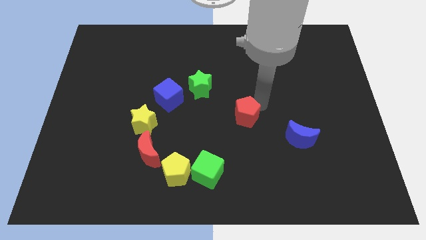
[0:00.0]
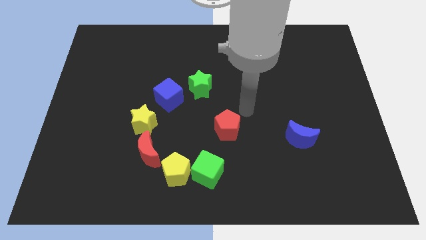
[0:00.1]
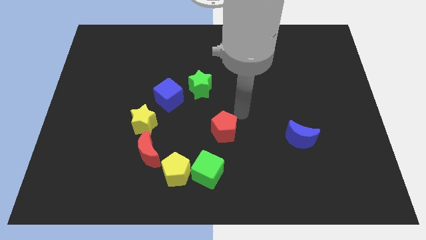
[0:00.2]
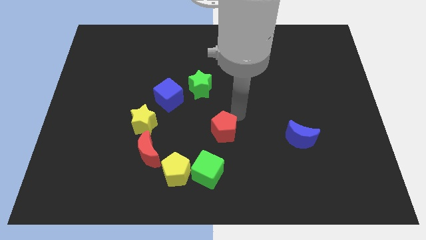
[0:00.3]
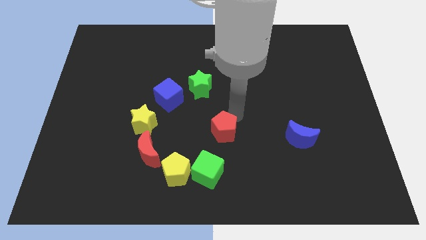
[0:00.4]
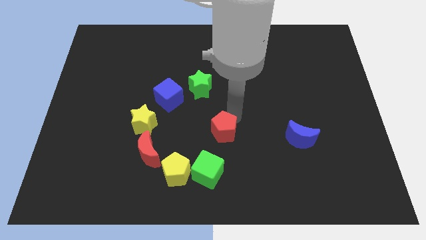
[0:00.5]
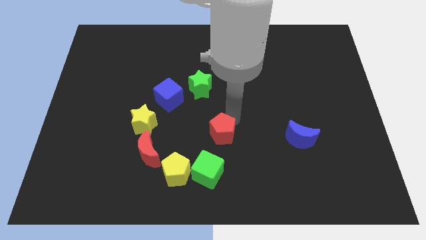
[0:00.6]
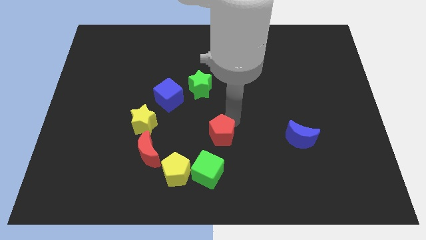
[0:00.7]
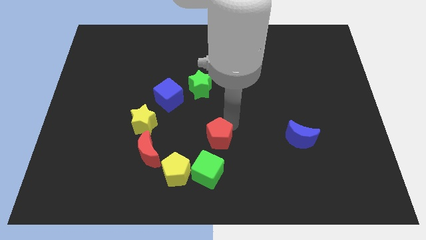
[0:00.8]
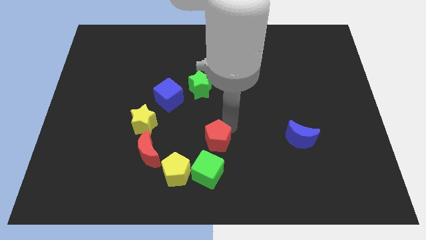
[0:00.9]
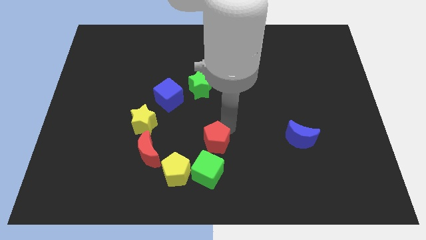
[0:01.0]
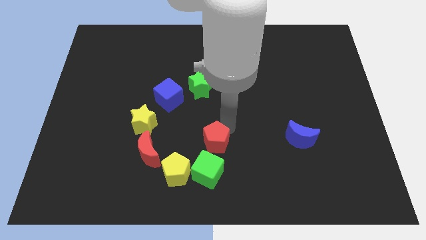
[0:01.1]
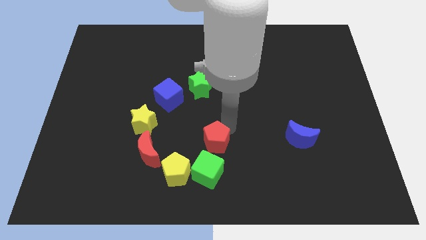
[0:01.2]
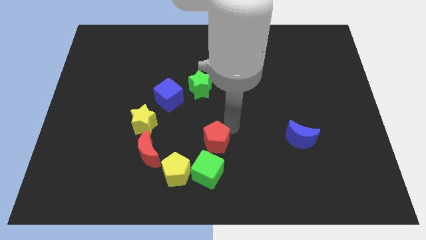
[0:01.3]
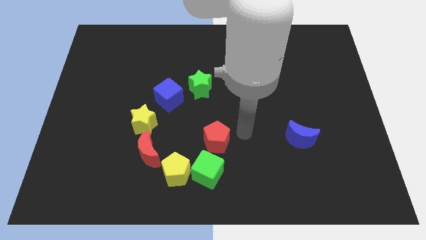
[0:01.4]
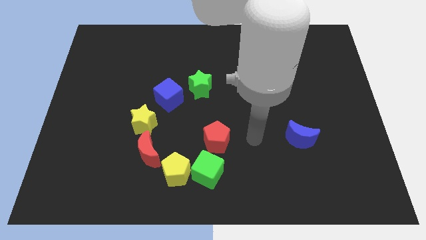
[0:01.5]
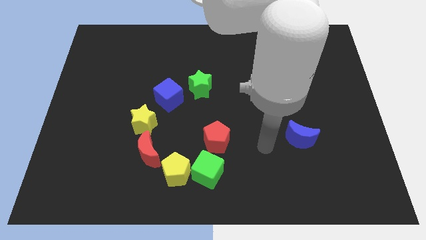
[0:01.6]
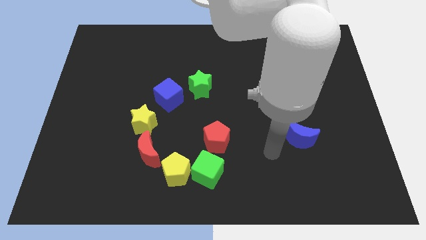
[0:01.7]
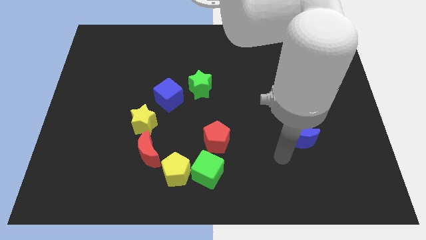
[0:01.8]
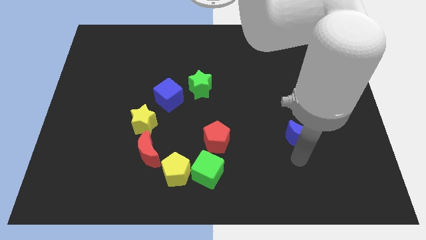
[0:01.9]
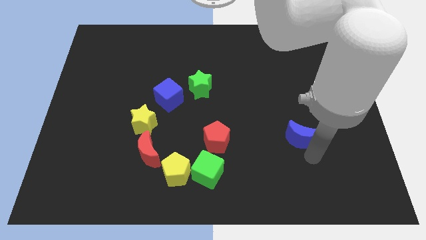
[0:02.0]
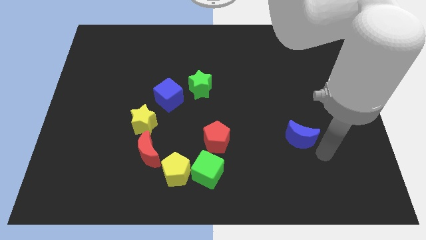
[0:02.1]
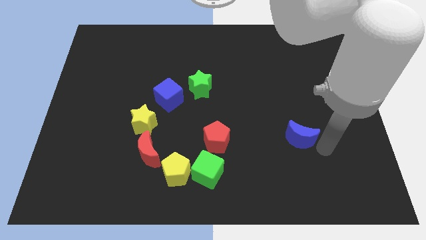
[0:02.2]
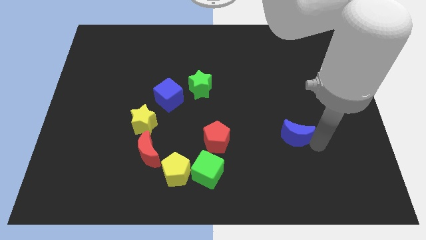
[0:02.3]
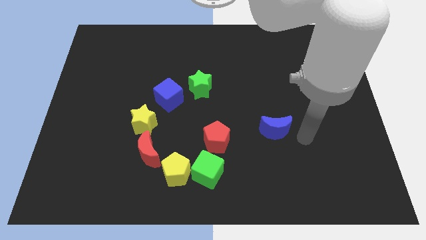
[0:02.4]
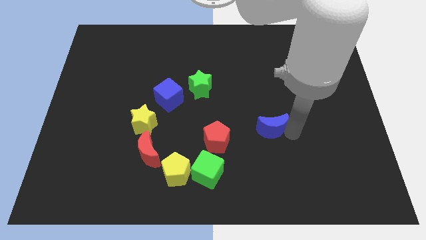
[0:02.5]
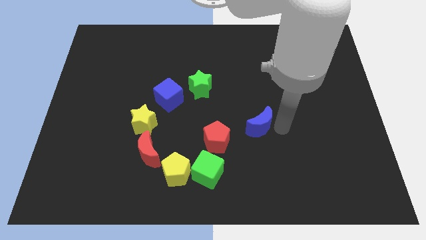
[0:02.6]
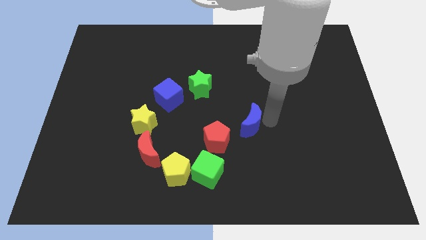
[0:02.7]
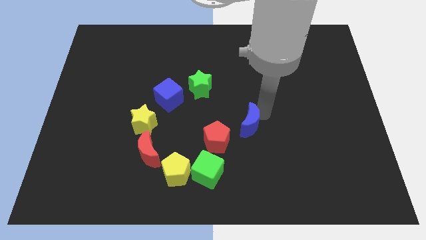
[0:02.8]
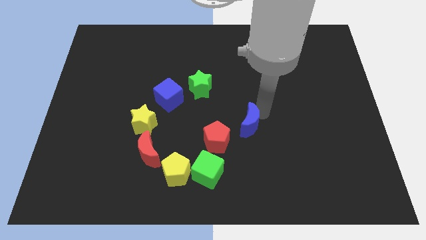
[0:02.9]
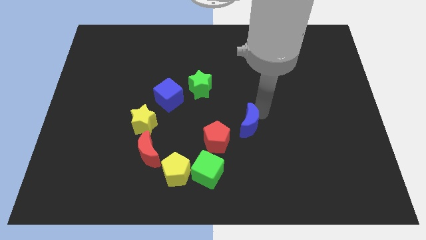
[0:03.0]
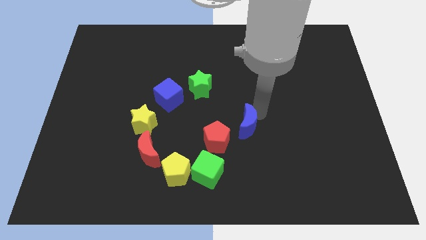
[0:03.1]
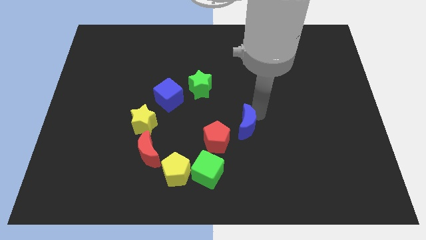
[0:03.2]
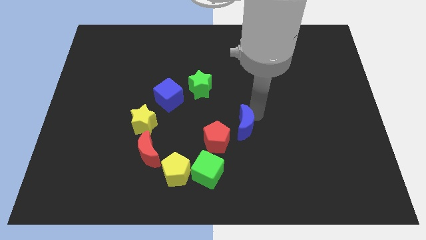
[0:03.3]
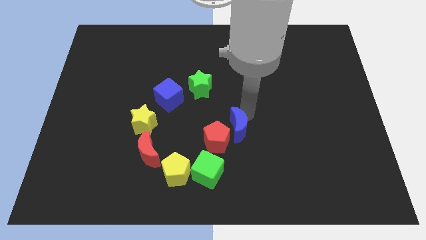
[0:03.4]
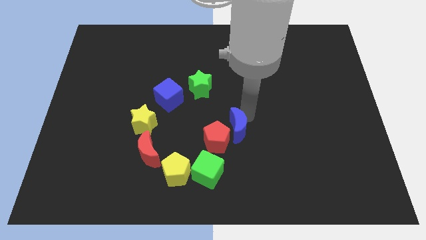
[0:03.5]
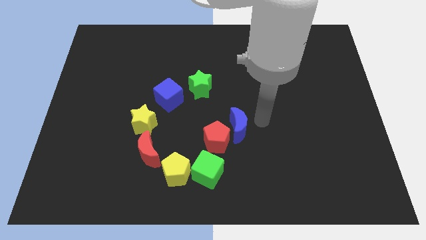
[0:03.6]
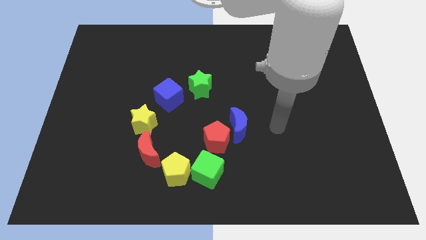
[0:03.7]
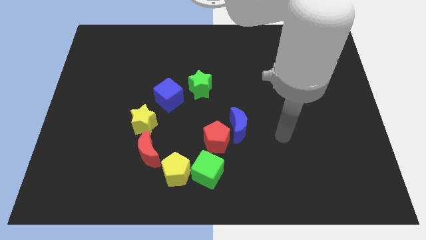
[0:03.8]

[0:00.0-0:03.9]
push the red pentagon towards the green cube

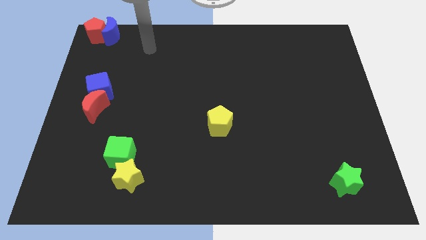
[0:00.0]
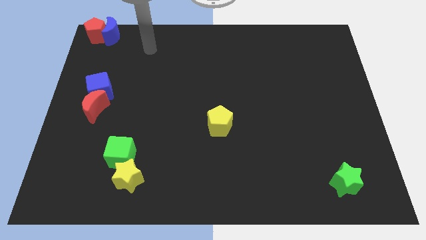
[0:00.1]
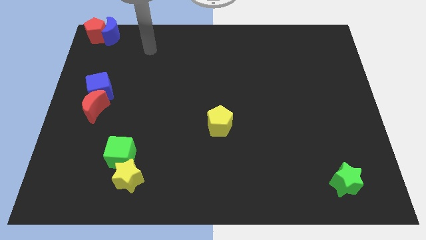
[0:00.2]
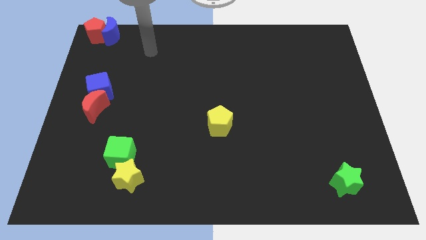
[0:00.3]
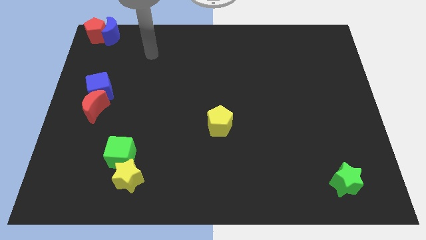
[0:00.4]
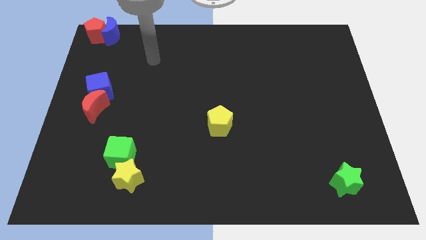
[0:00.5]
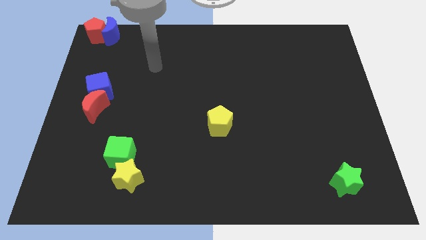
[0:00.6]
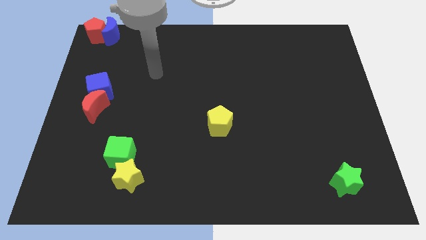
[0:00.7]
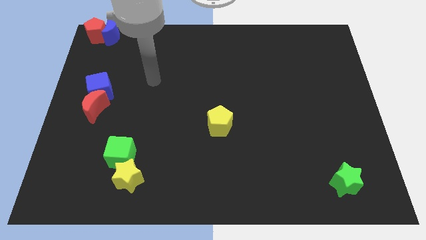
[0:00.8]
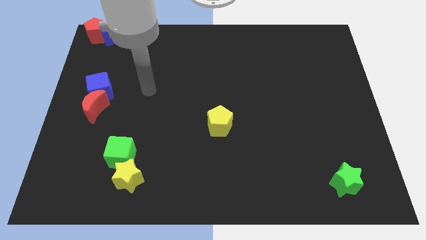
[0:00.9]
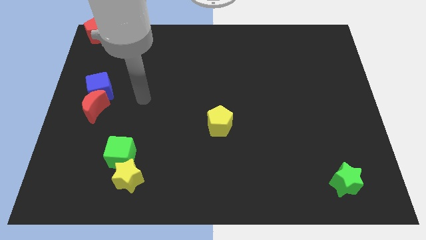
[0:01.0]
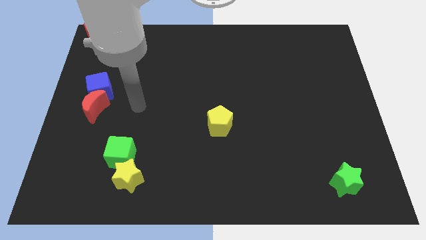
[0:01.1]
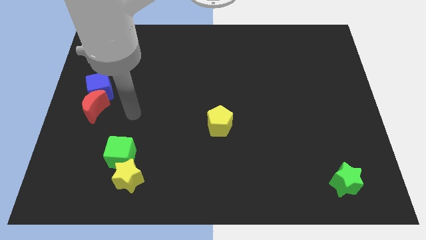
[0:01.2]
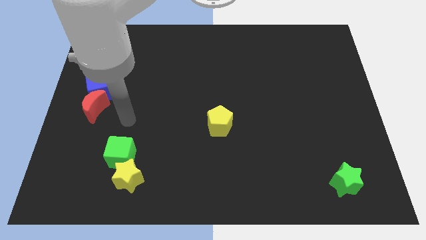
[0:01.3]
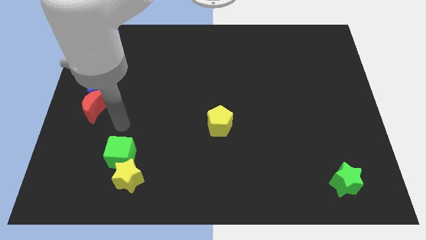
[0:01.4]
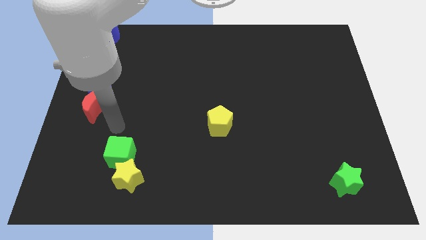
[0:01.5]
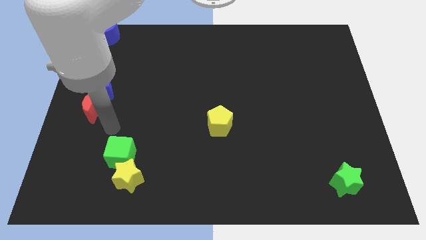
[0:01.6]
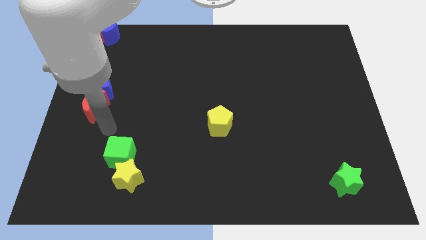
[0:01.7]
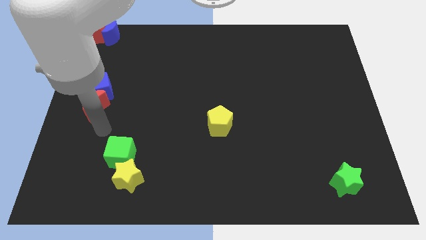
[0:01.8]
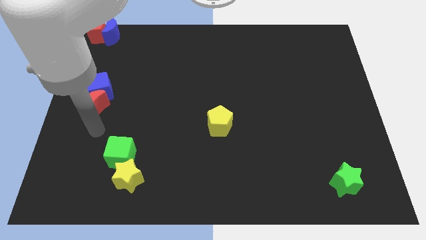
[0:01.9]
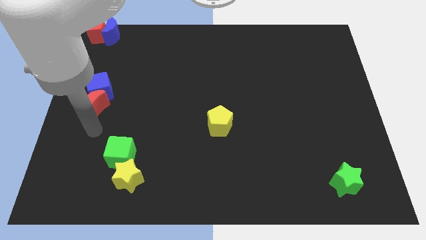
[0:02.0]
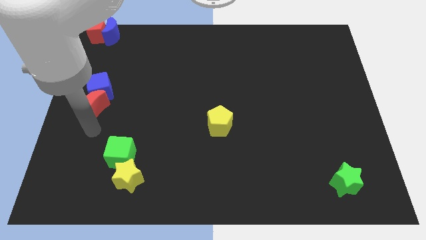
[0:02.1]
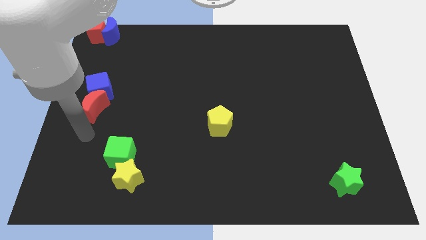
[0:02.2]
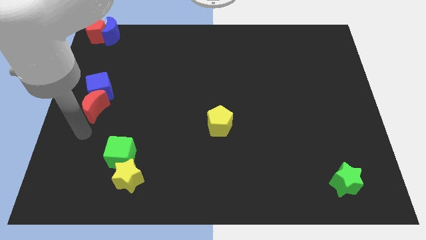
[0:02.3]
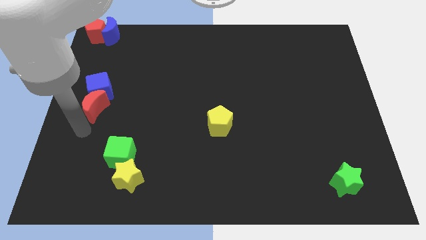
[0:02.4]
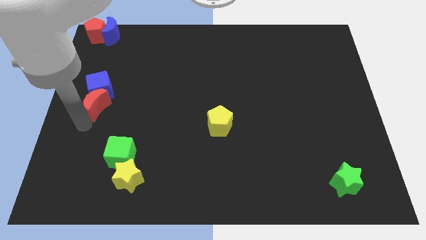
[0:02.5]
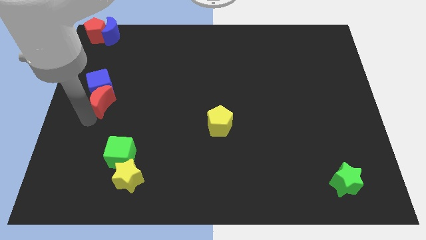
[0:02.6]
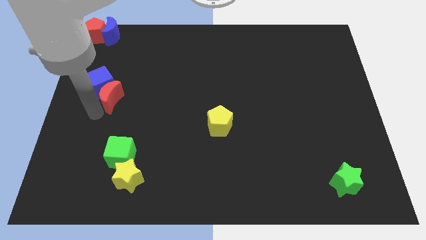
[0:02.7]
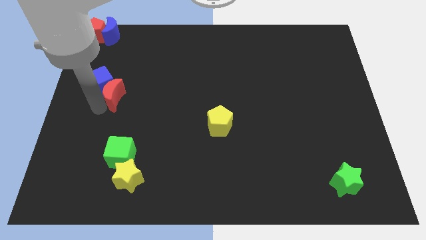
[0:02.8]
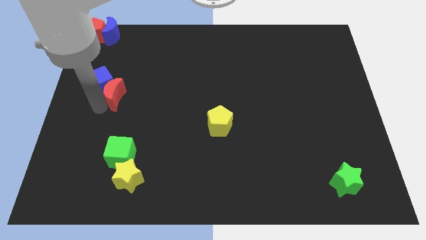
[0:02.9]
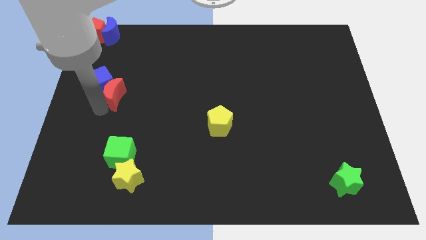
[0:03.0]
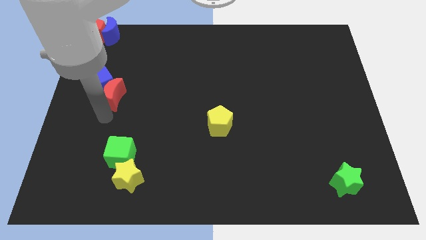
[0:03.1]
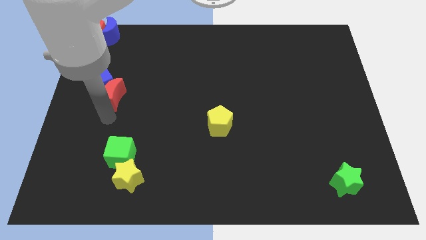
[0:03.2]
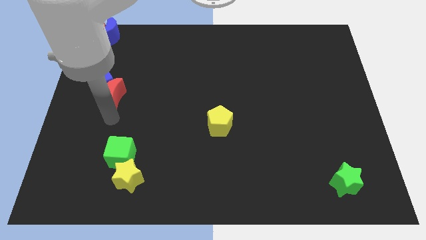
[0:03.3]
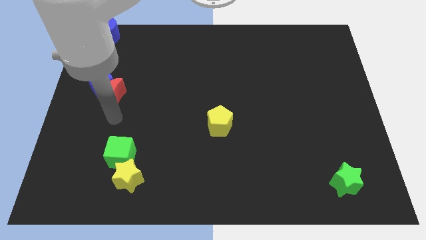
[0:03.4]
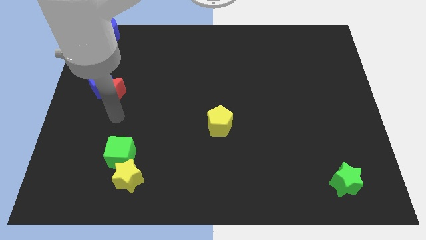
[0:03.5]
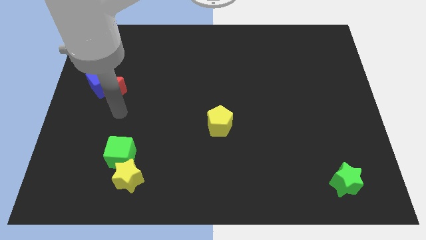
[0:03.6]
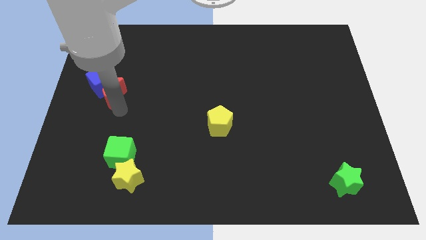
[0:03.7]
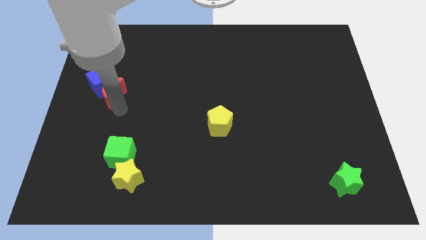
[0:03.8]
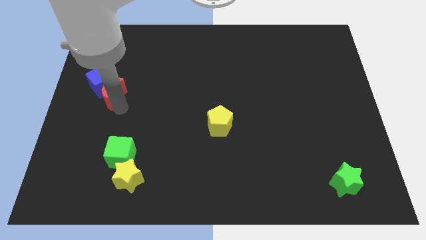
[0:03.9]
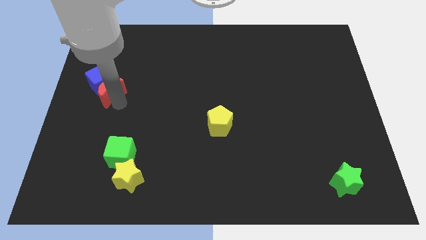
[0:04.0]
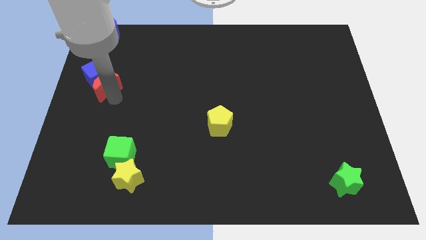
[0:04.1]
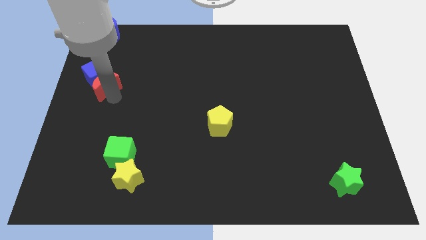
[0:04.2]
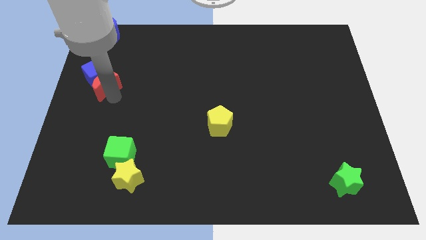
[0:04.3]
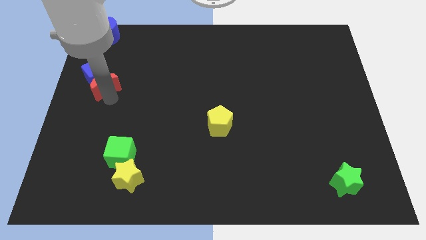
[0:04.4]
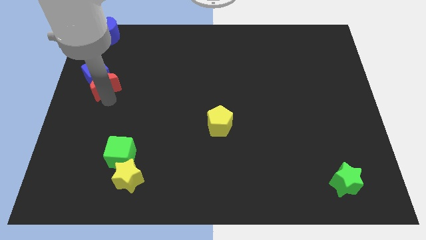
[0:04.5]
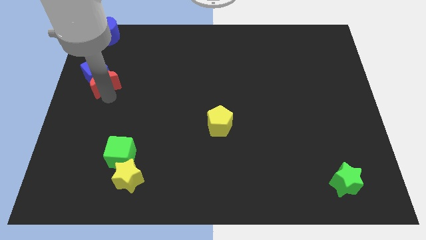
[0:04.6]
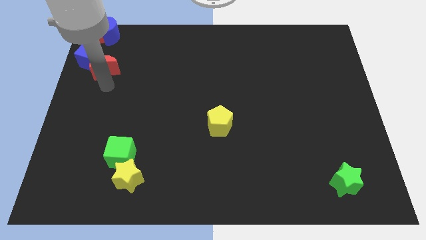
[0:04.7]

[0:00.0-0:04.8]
push the red moon and blue cube towards the group of blocks at the top left of the table

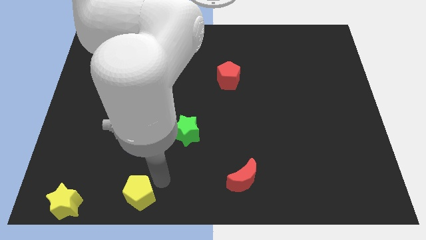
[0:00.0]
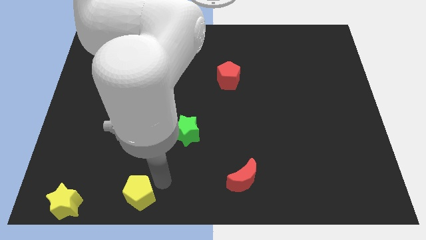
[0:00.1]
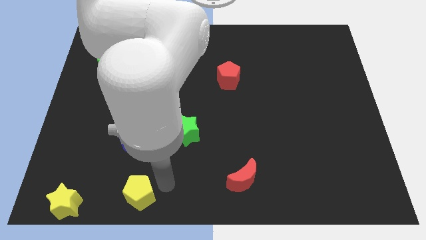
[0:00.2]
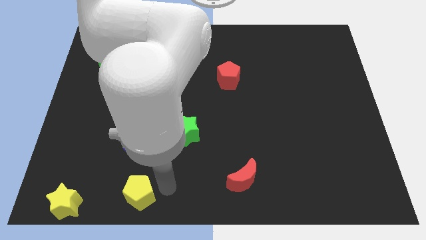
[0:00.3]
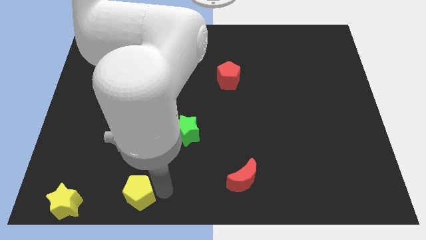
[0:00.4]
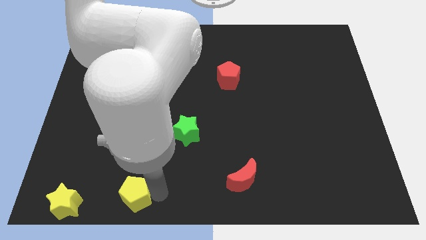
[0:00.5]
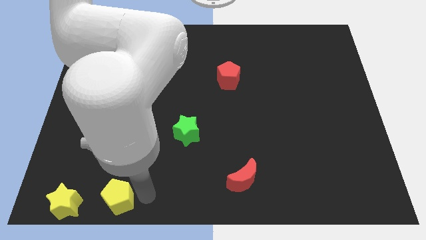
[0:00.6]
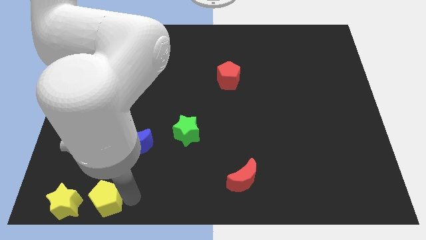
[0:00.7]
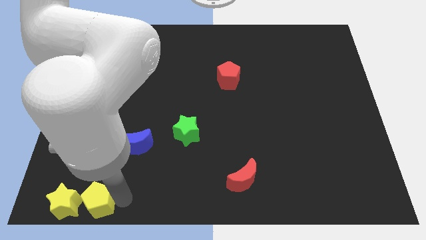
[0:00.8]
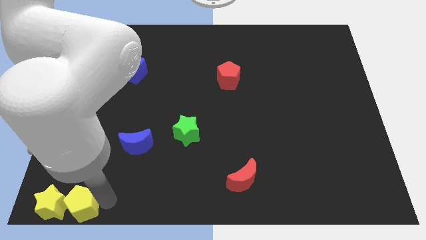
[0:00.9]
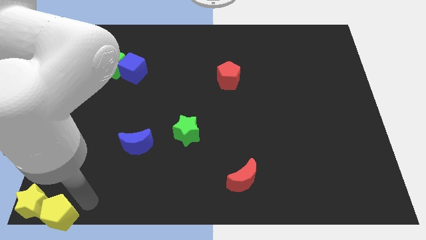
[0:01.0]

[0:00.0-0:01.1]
push yellow pentagon to the bottom left
